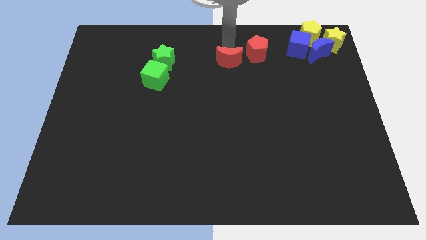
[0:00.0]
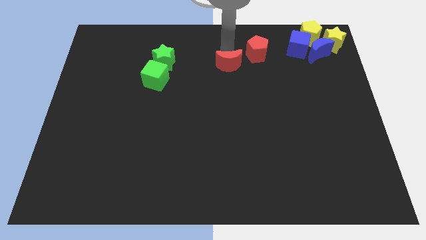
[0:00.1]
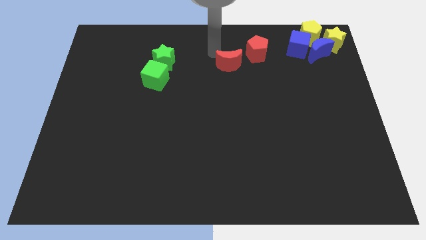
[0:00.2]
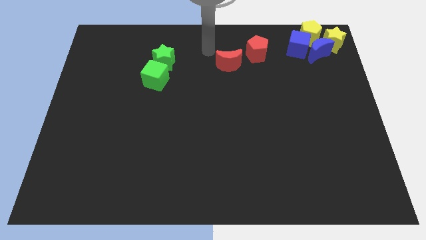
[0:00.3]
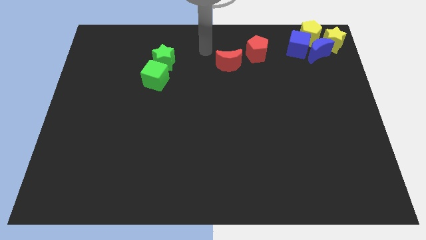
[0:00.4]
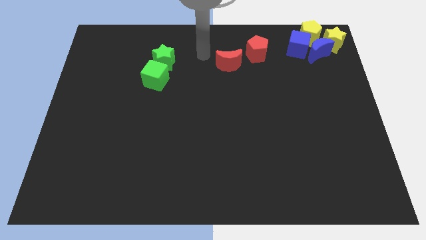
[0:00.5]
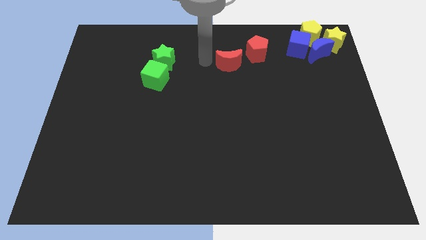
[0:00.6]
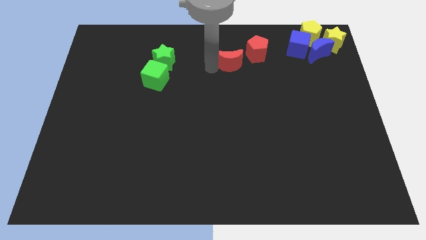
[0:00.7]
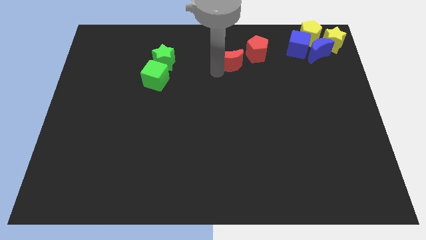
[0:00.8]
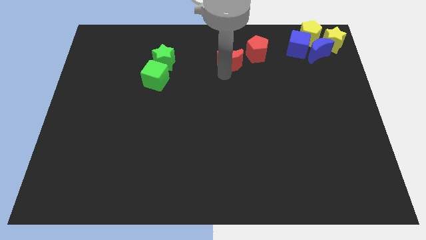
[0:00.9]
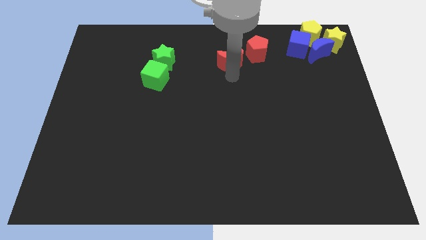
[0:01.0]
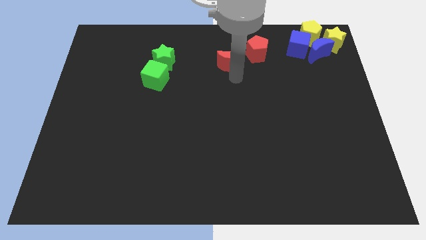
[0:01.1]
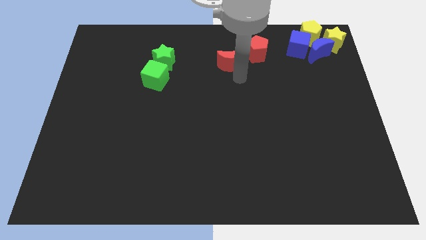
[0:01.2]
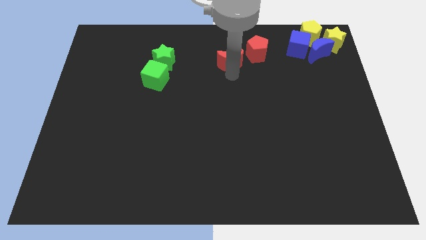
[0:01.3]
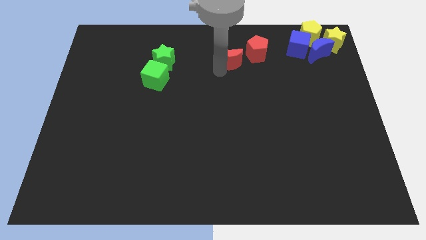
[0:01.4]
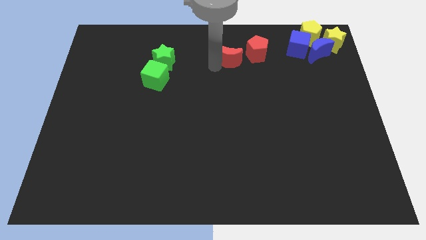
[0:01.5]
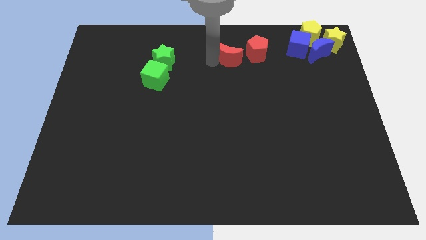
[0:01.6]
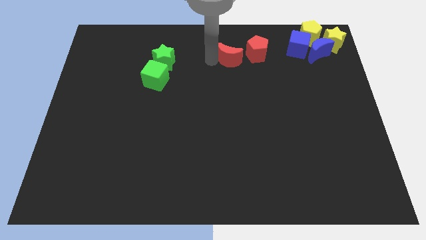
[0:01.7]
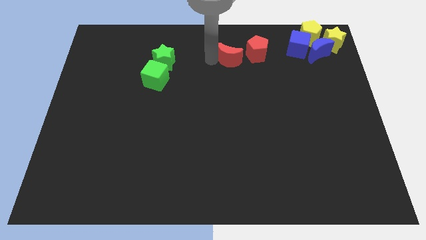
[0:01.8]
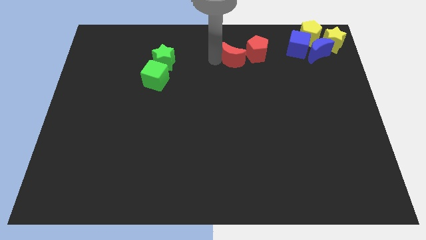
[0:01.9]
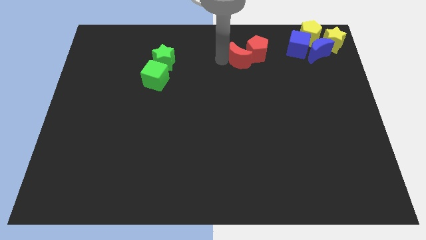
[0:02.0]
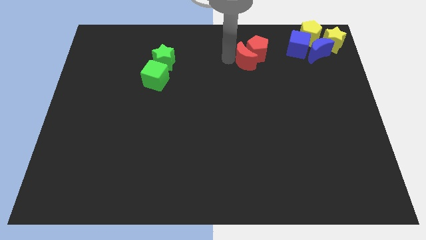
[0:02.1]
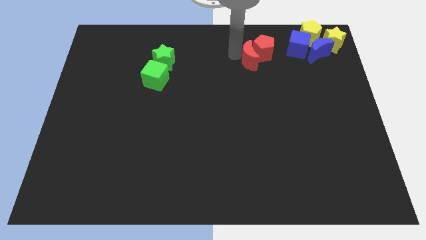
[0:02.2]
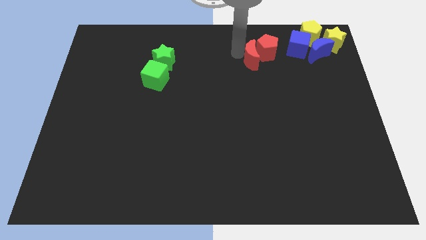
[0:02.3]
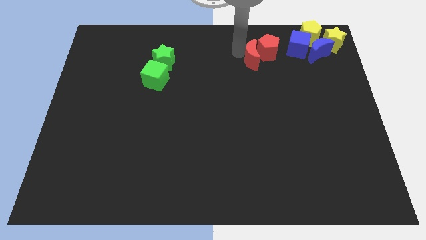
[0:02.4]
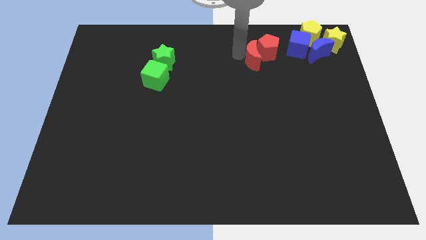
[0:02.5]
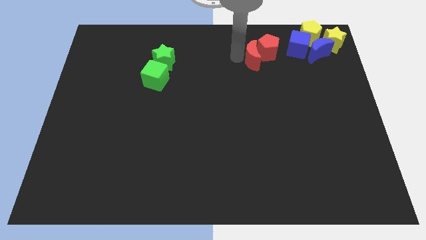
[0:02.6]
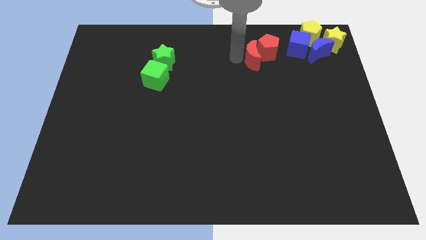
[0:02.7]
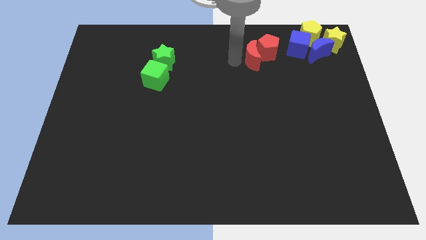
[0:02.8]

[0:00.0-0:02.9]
push the red moon into the the left of red pentagon

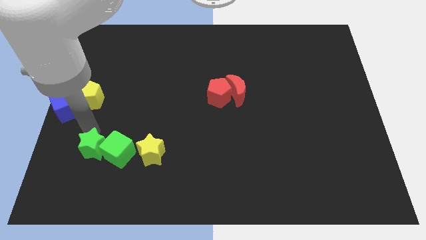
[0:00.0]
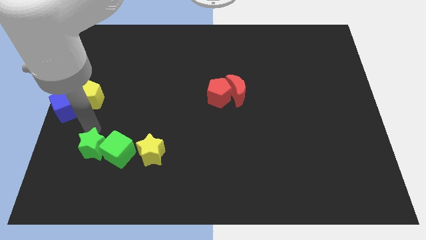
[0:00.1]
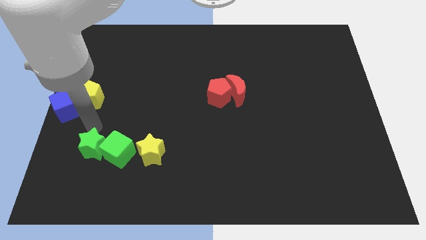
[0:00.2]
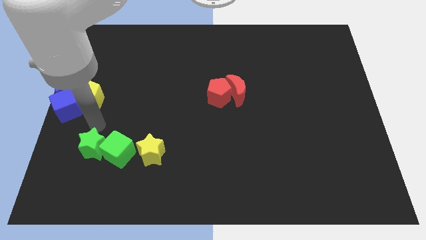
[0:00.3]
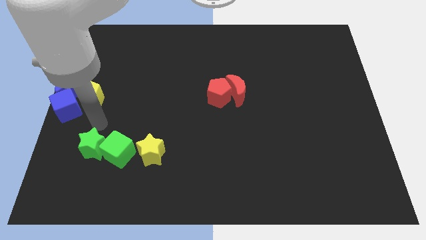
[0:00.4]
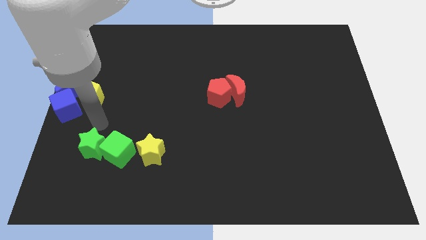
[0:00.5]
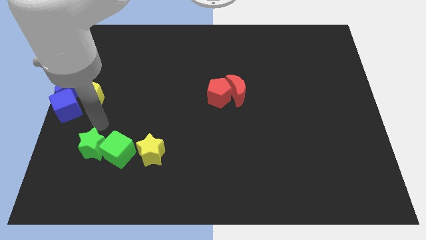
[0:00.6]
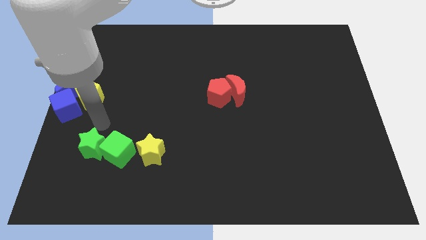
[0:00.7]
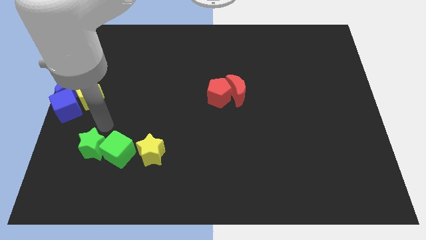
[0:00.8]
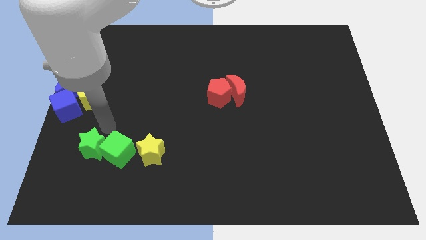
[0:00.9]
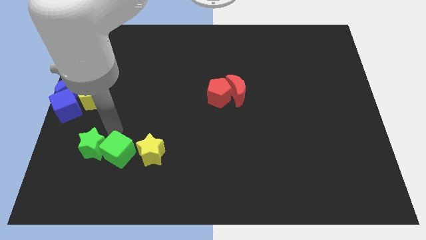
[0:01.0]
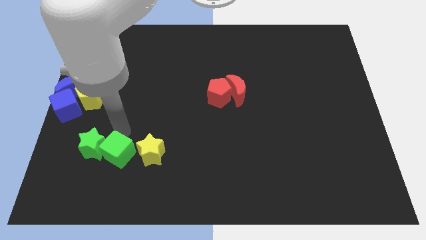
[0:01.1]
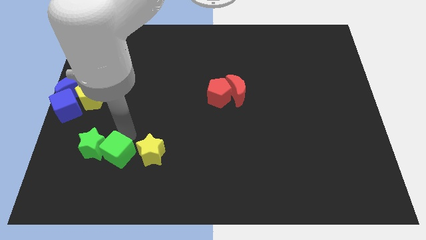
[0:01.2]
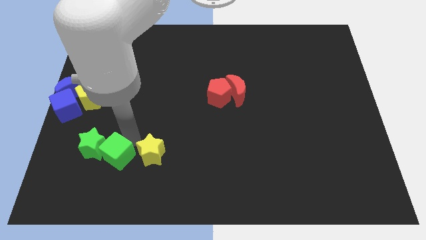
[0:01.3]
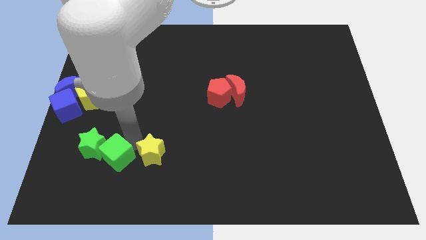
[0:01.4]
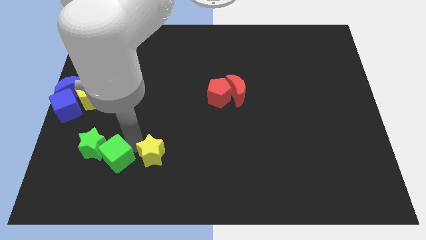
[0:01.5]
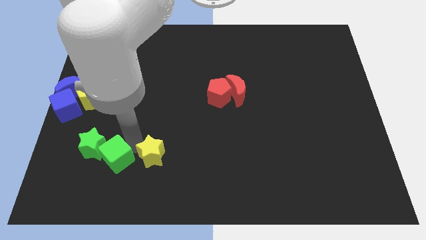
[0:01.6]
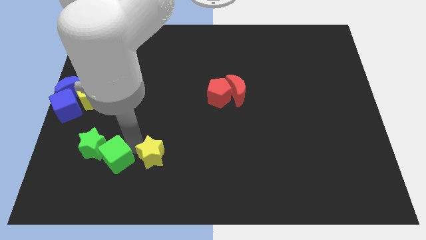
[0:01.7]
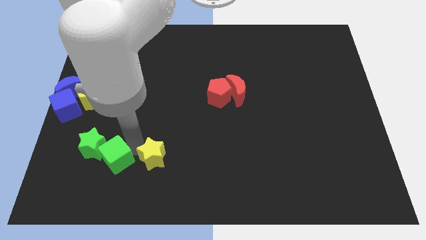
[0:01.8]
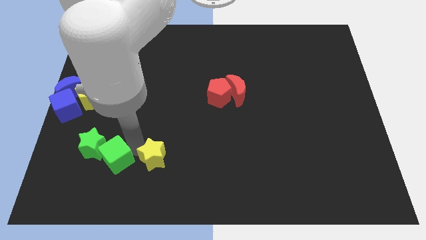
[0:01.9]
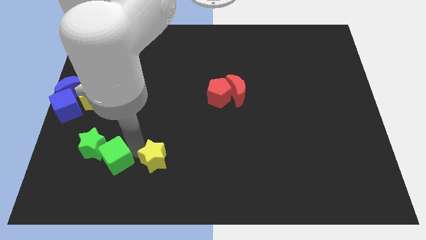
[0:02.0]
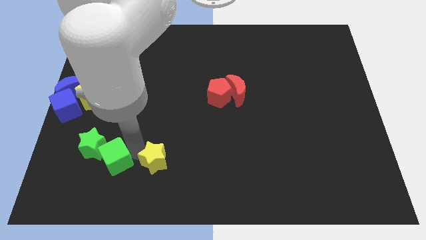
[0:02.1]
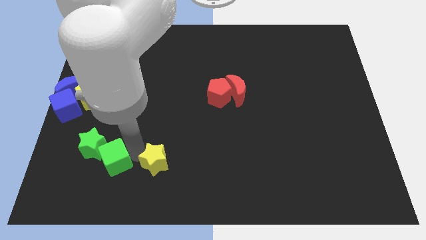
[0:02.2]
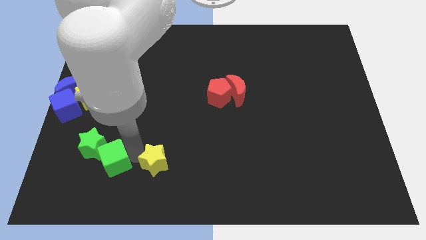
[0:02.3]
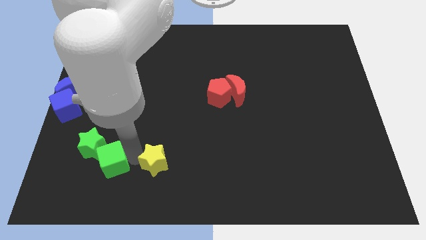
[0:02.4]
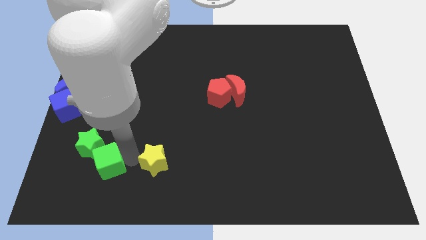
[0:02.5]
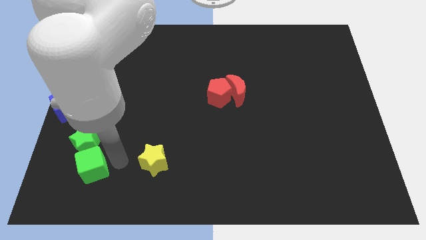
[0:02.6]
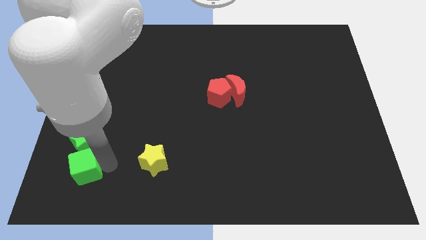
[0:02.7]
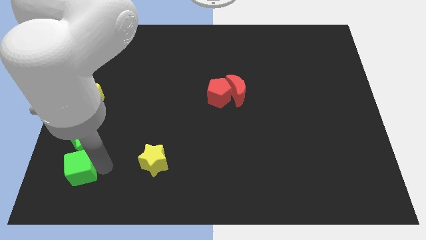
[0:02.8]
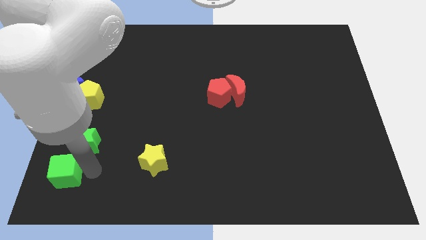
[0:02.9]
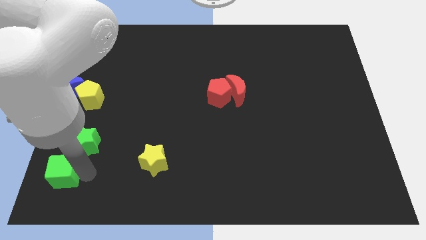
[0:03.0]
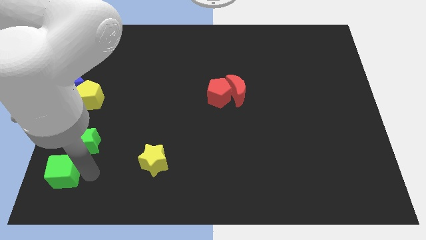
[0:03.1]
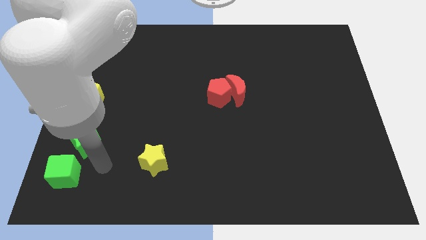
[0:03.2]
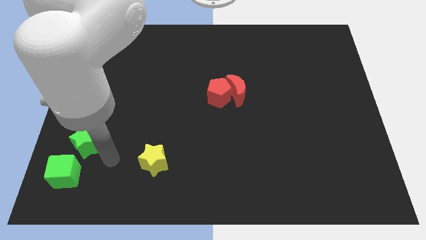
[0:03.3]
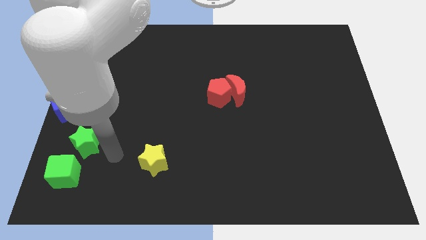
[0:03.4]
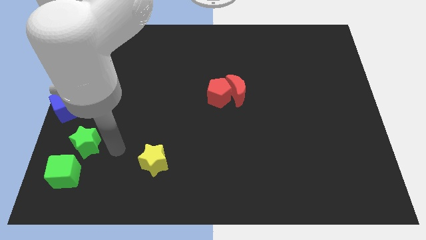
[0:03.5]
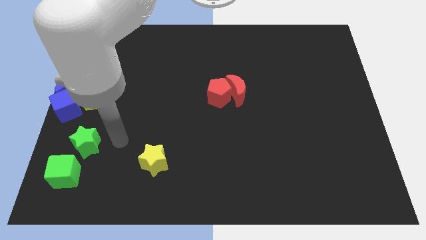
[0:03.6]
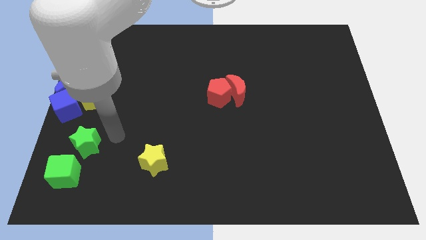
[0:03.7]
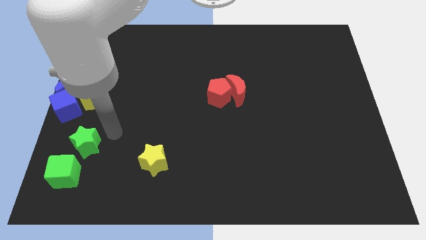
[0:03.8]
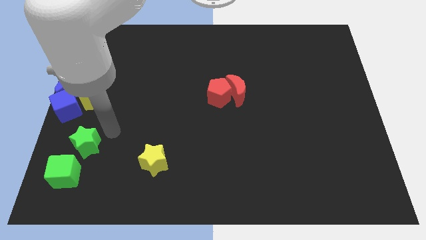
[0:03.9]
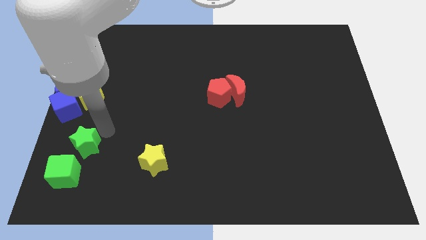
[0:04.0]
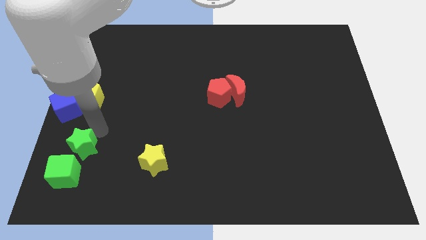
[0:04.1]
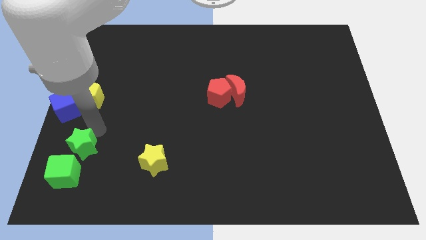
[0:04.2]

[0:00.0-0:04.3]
separate the green cube from the yellow star

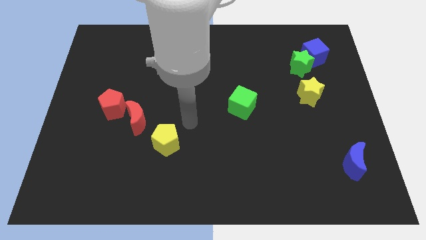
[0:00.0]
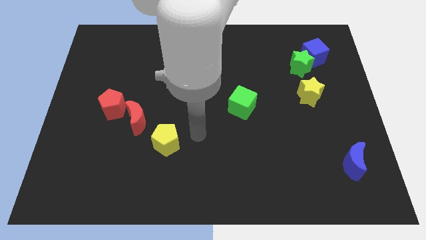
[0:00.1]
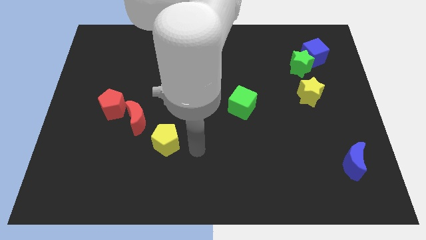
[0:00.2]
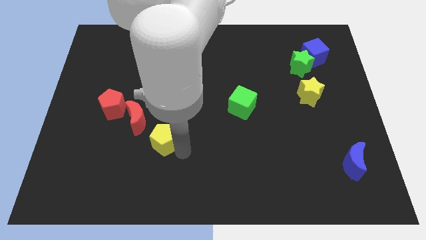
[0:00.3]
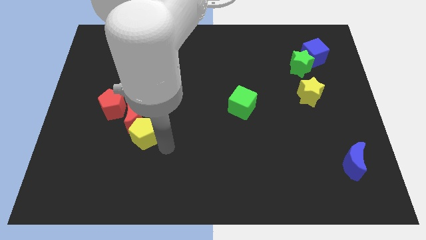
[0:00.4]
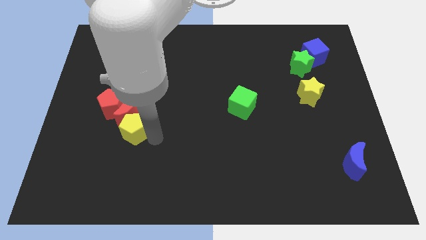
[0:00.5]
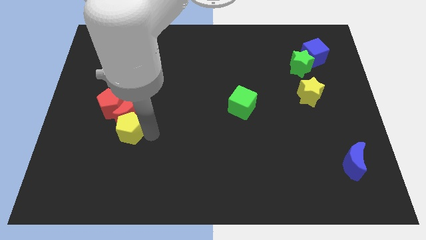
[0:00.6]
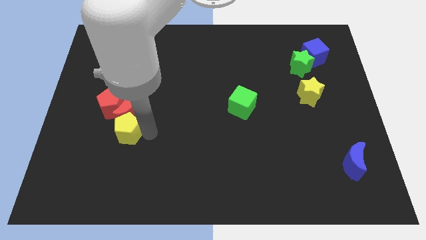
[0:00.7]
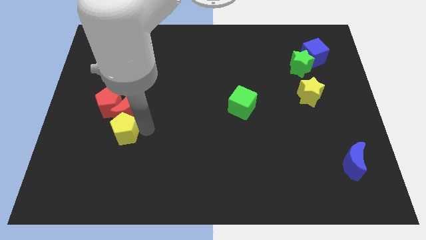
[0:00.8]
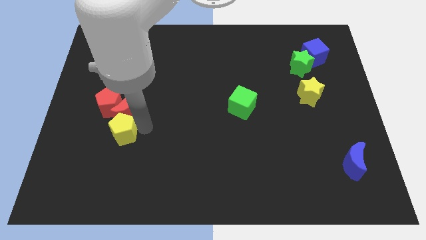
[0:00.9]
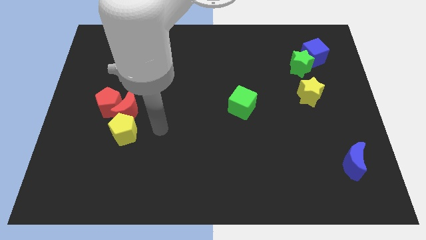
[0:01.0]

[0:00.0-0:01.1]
push the yellow pentagon into the bottom of the red moon

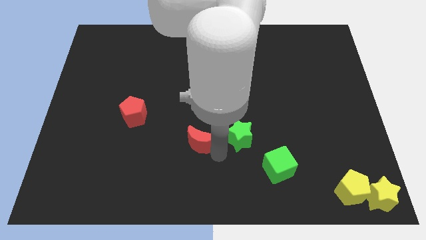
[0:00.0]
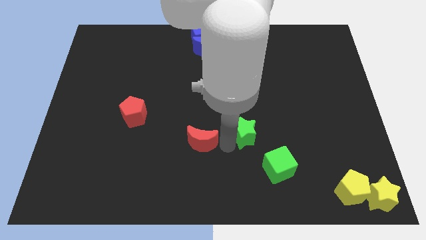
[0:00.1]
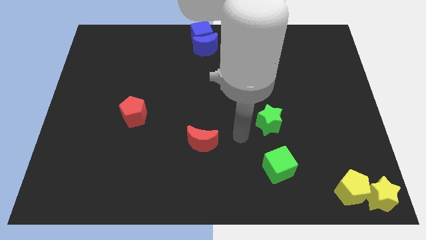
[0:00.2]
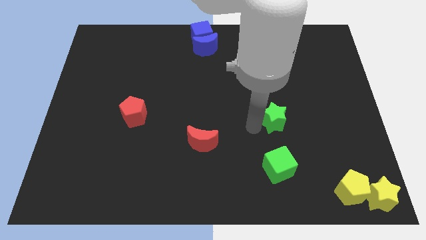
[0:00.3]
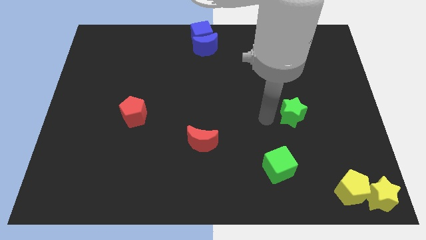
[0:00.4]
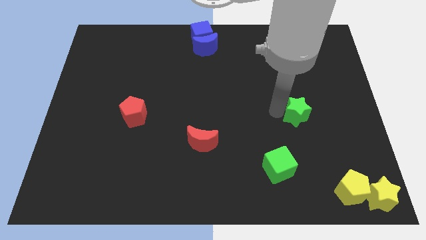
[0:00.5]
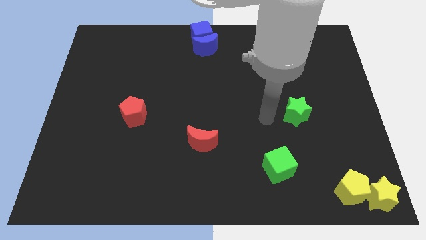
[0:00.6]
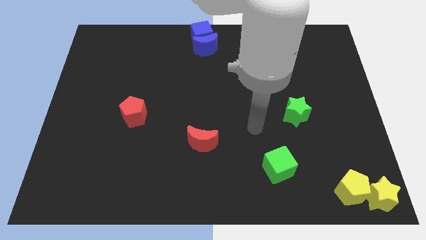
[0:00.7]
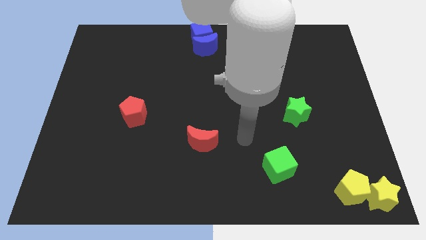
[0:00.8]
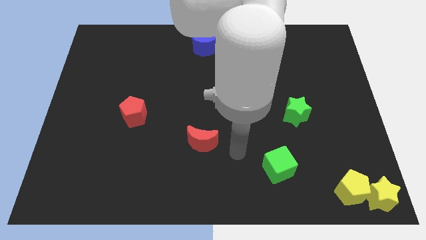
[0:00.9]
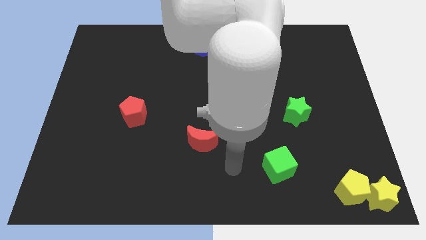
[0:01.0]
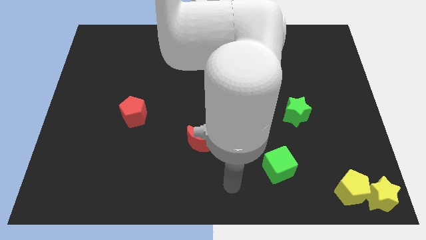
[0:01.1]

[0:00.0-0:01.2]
drag the green star to the right
